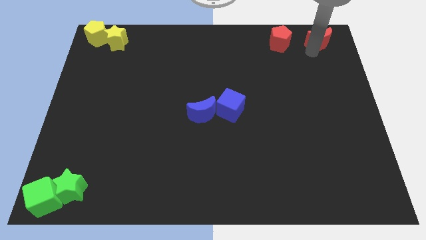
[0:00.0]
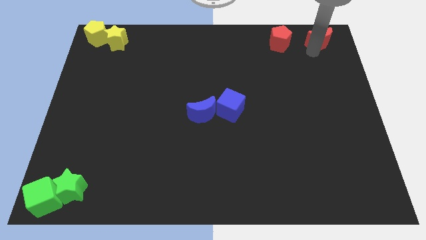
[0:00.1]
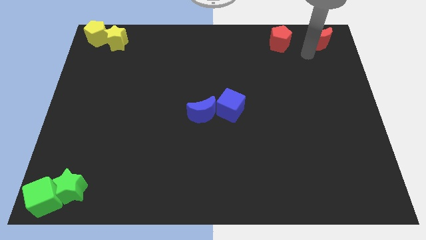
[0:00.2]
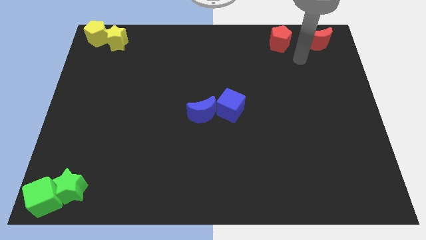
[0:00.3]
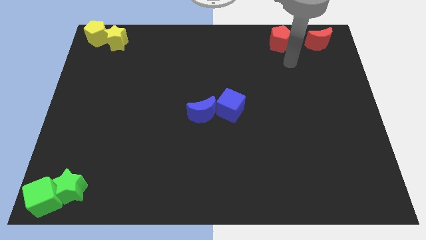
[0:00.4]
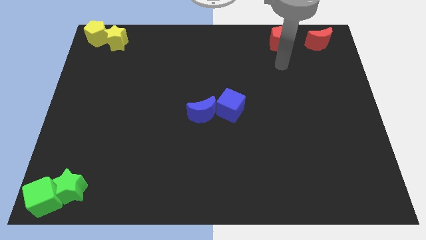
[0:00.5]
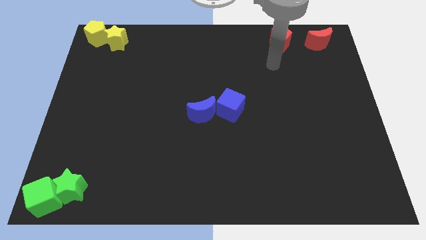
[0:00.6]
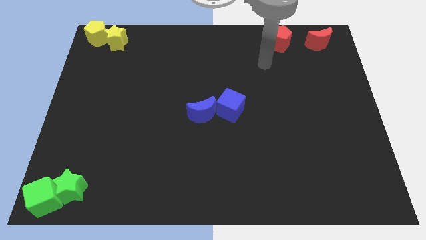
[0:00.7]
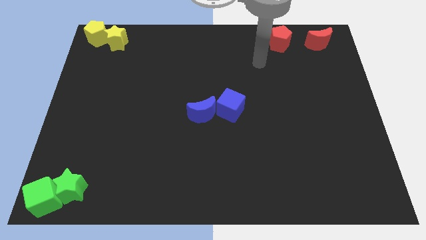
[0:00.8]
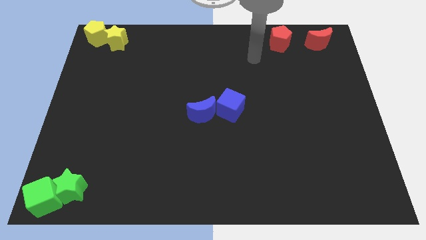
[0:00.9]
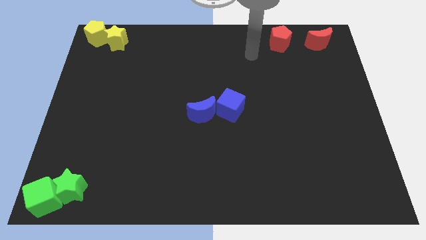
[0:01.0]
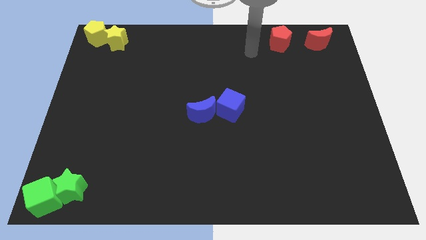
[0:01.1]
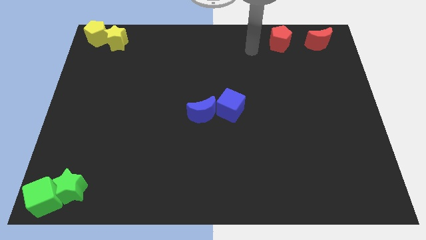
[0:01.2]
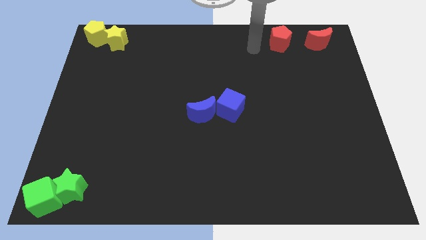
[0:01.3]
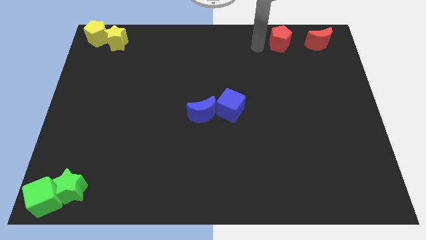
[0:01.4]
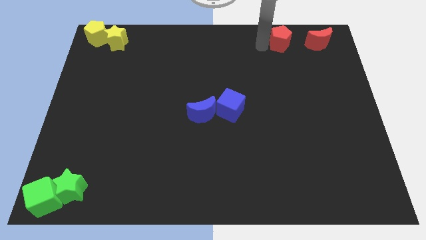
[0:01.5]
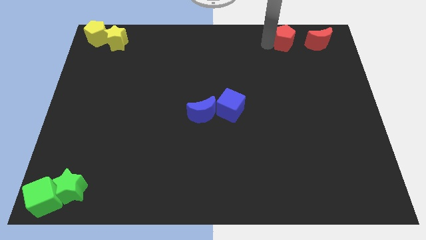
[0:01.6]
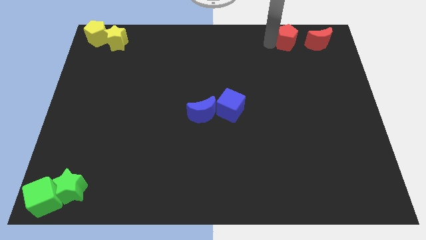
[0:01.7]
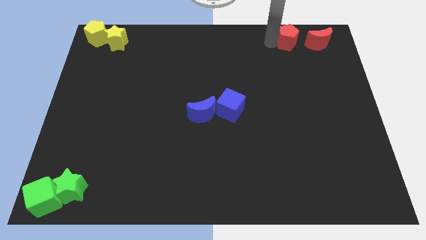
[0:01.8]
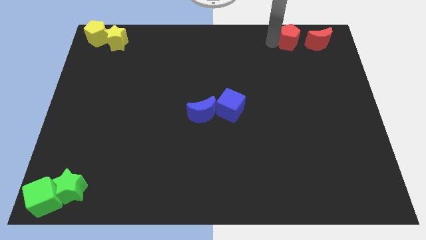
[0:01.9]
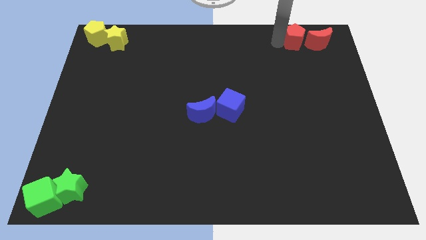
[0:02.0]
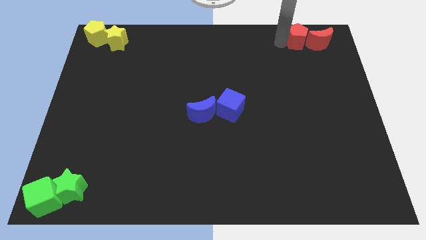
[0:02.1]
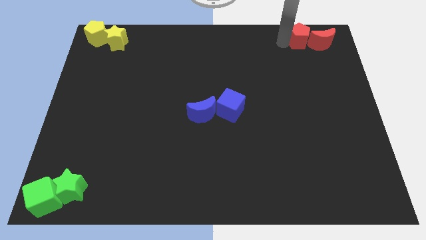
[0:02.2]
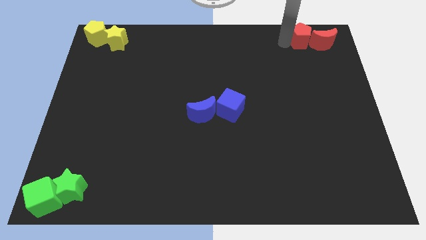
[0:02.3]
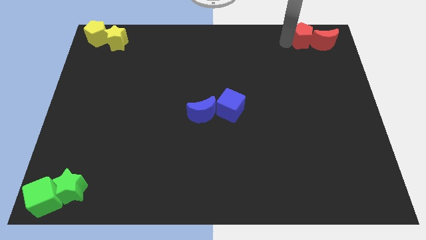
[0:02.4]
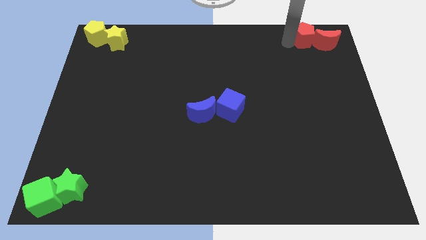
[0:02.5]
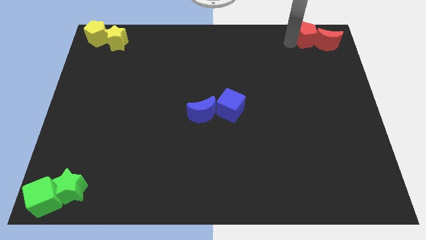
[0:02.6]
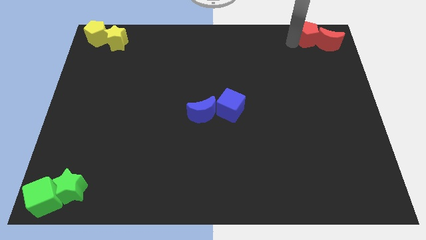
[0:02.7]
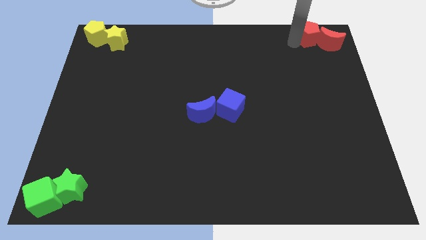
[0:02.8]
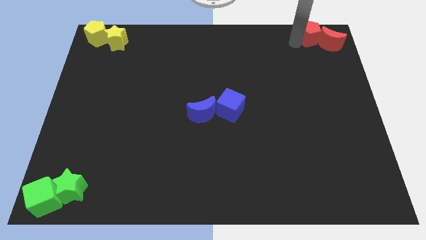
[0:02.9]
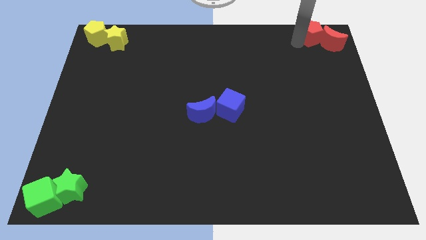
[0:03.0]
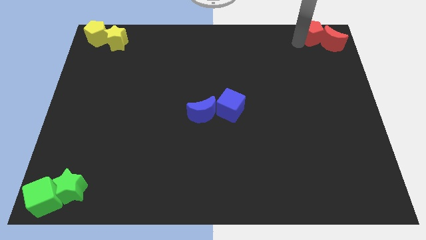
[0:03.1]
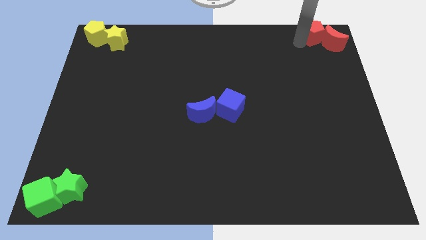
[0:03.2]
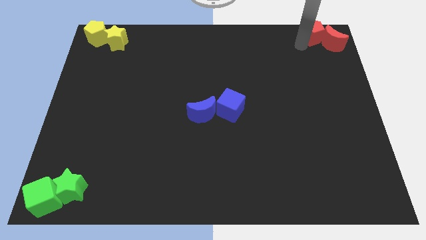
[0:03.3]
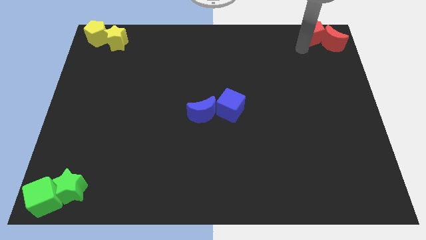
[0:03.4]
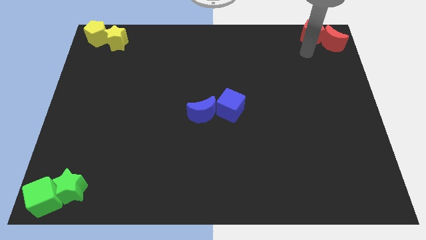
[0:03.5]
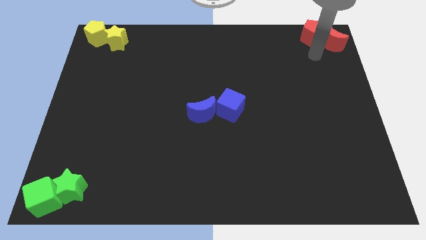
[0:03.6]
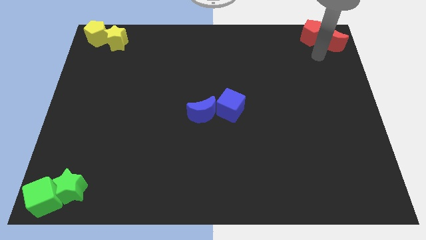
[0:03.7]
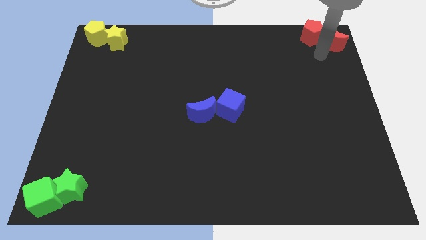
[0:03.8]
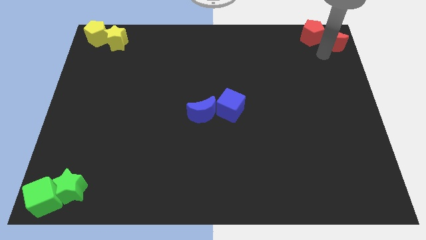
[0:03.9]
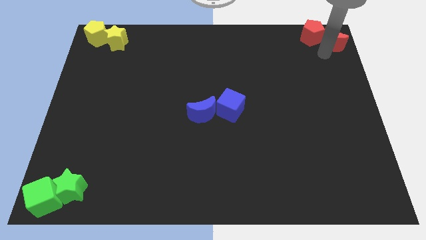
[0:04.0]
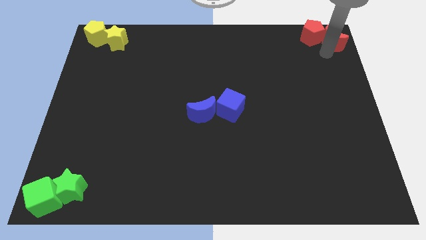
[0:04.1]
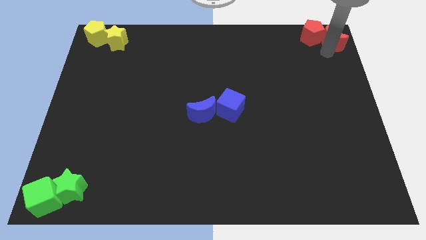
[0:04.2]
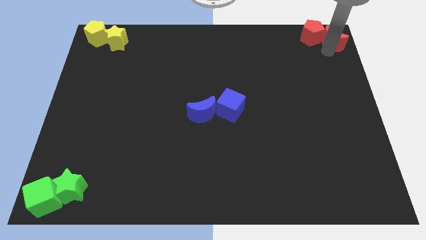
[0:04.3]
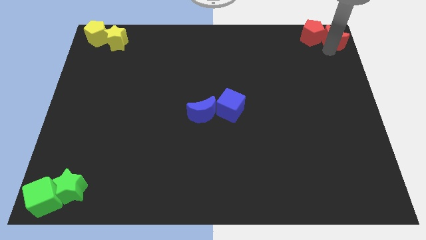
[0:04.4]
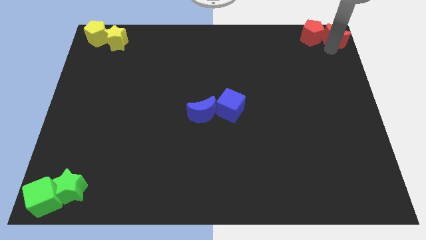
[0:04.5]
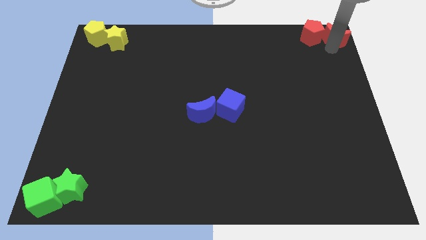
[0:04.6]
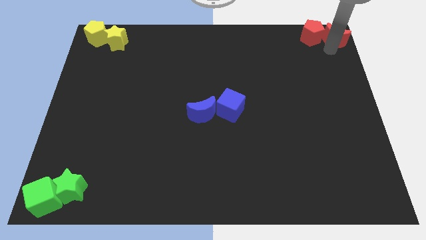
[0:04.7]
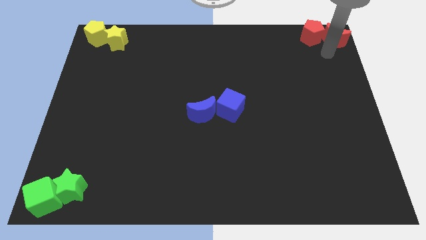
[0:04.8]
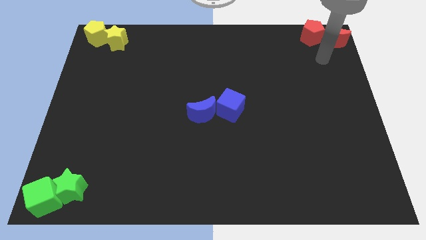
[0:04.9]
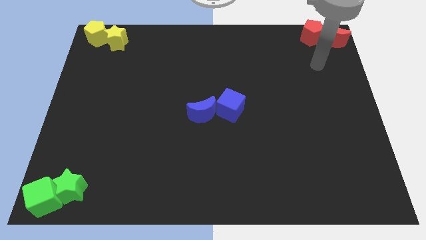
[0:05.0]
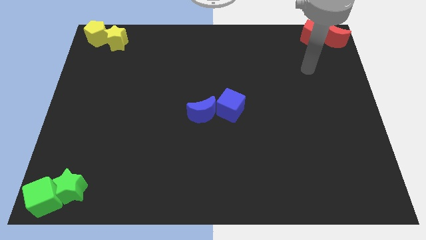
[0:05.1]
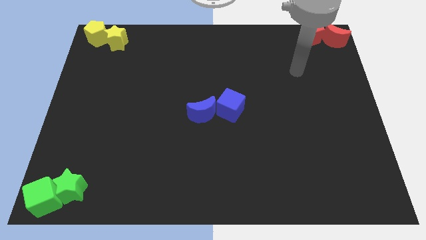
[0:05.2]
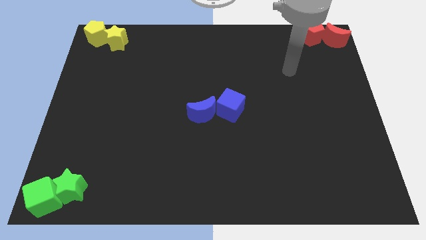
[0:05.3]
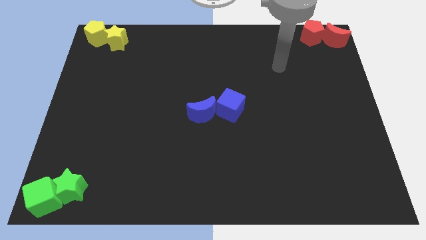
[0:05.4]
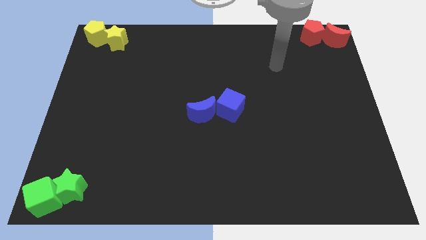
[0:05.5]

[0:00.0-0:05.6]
put the red blocks together at the top right corner of the board

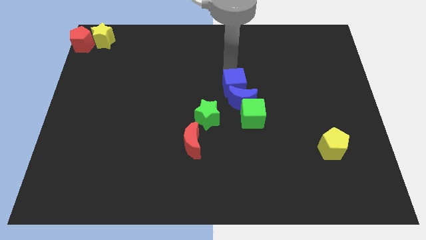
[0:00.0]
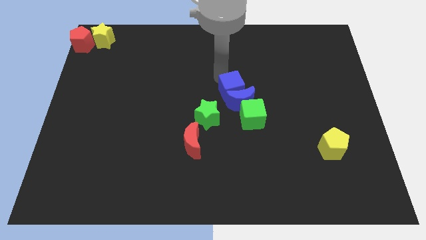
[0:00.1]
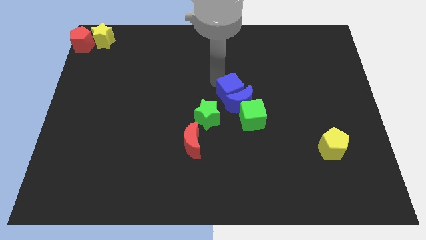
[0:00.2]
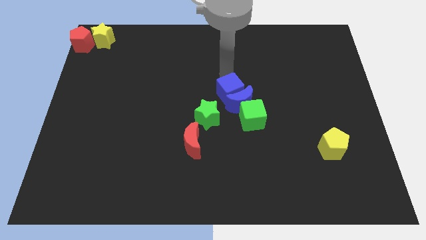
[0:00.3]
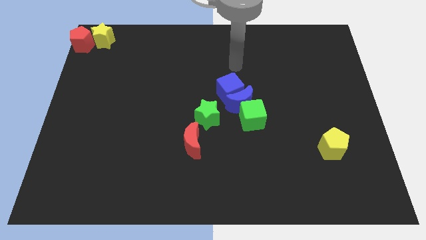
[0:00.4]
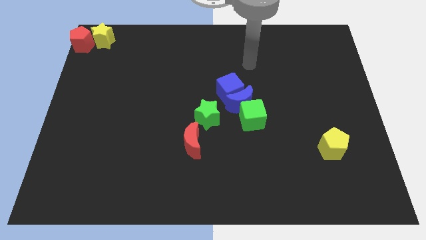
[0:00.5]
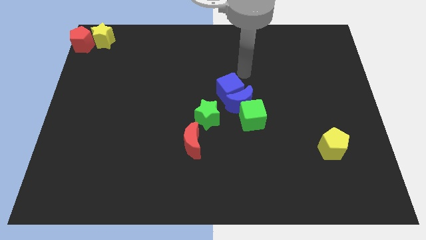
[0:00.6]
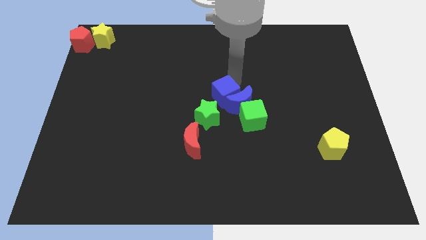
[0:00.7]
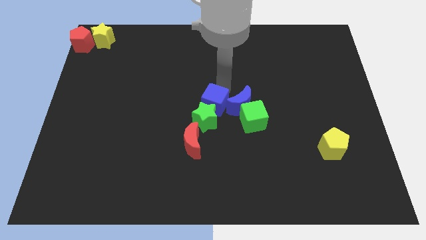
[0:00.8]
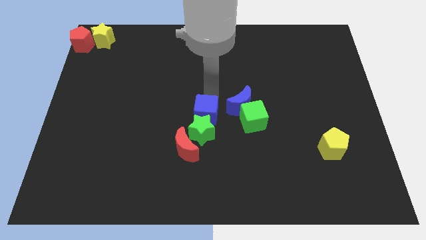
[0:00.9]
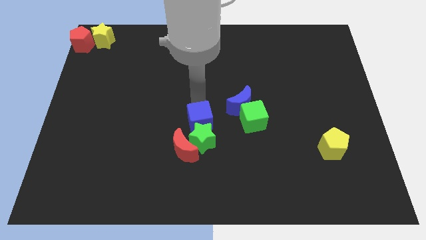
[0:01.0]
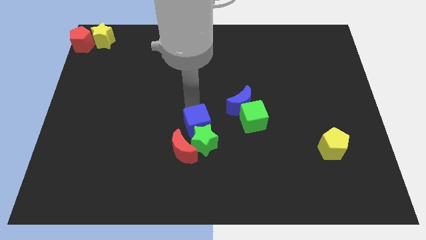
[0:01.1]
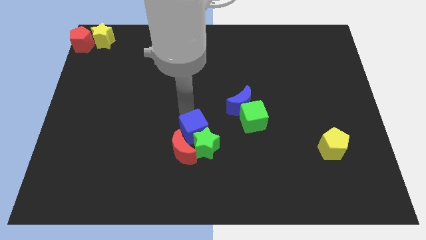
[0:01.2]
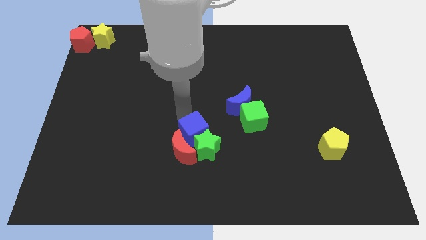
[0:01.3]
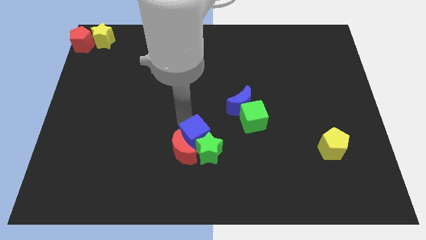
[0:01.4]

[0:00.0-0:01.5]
push the blue cube into the green star

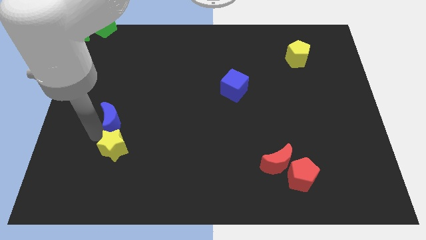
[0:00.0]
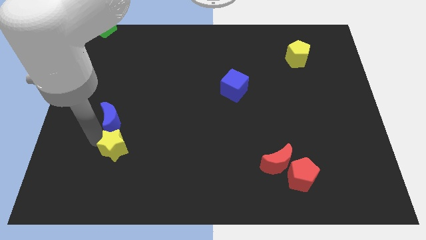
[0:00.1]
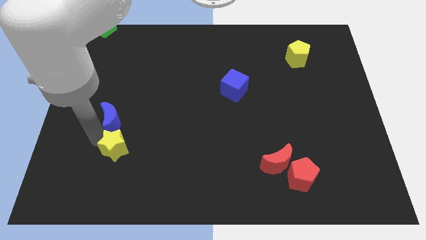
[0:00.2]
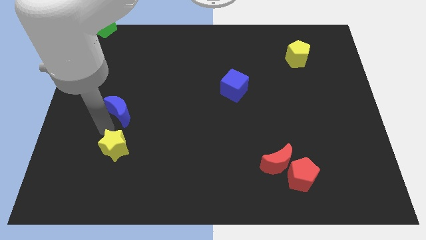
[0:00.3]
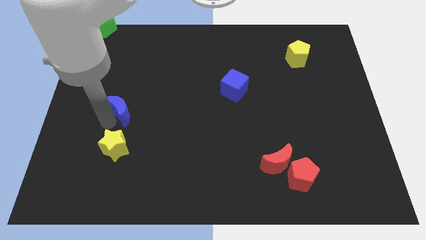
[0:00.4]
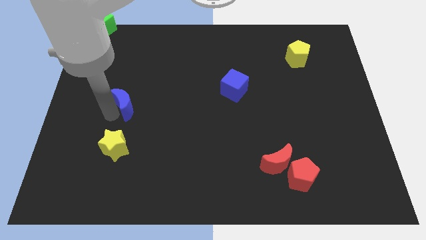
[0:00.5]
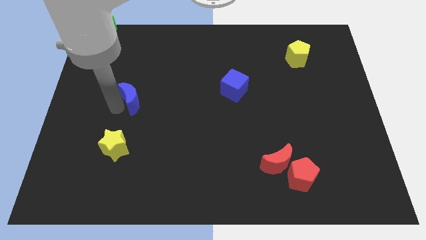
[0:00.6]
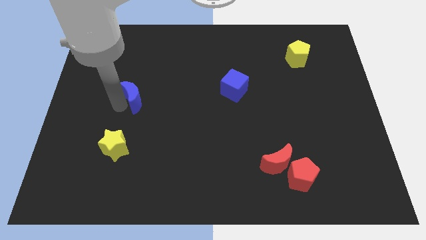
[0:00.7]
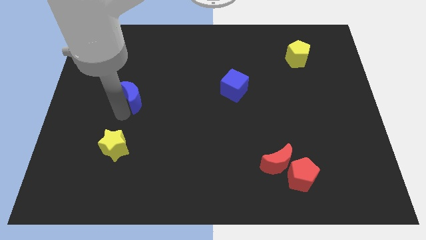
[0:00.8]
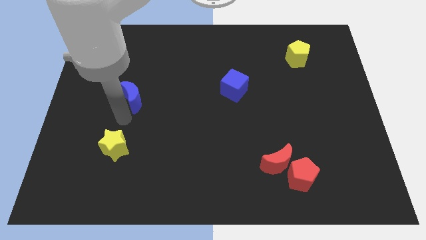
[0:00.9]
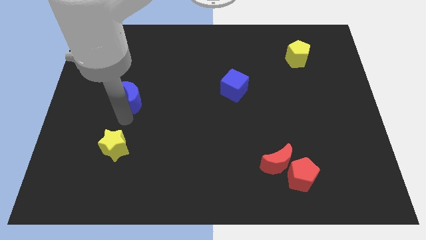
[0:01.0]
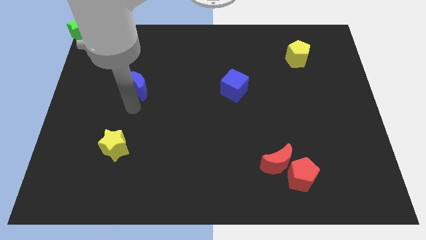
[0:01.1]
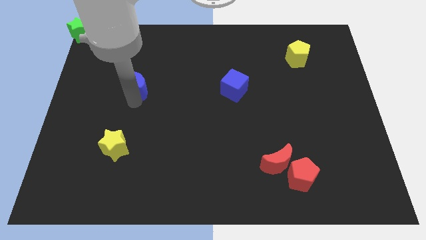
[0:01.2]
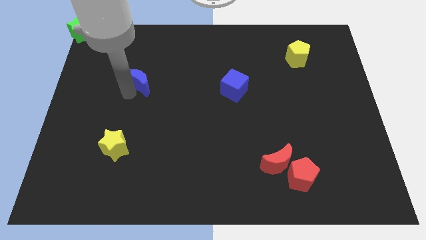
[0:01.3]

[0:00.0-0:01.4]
move the blue crescent away from the yellow star

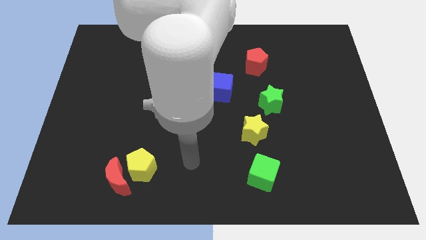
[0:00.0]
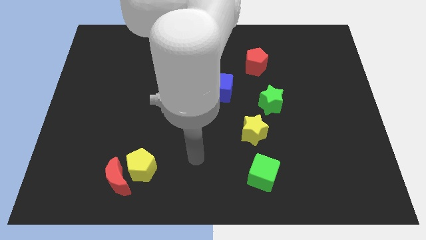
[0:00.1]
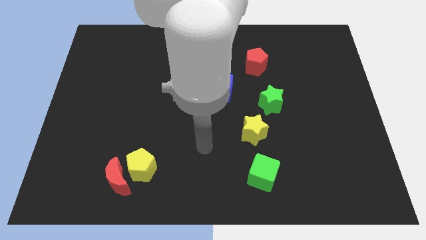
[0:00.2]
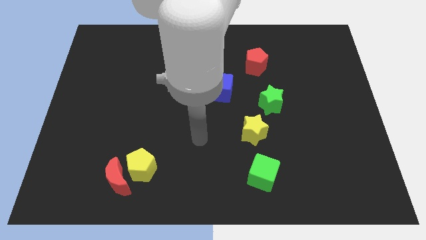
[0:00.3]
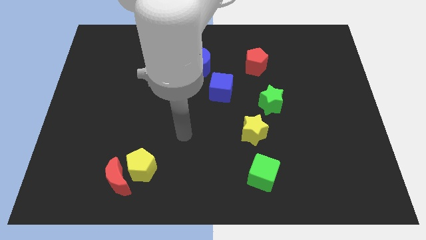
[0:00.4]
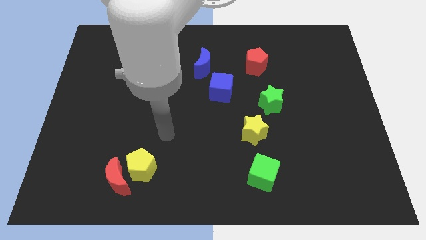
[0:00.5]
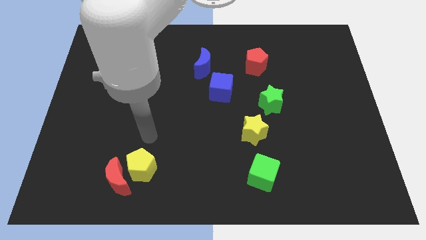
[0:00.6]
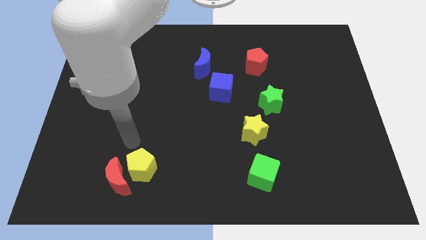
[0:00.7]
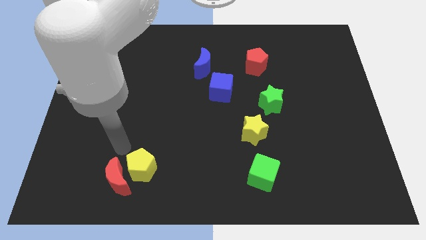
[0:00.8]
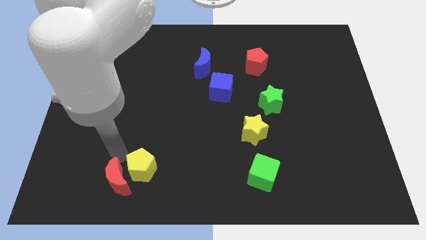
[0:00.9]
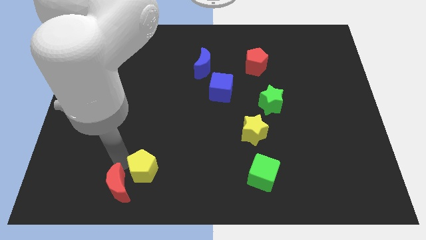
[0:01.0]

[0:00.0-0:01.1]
touch the top of the red crescent
